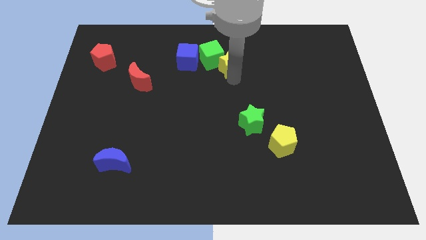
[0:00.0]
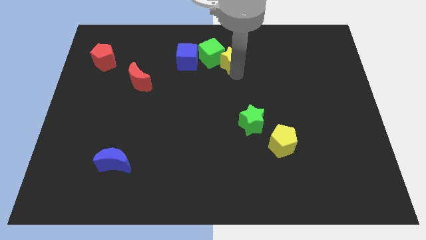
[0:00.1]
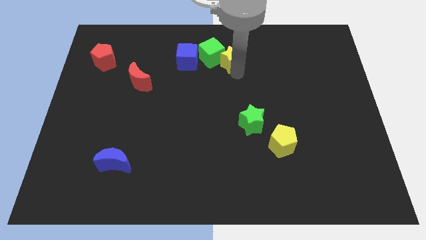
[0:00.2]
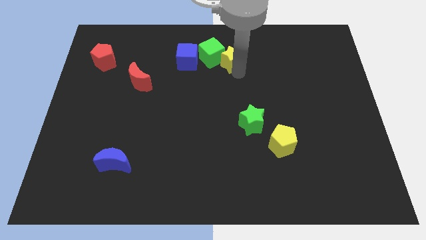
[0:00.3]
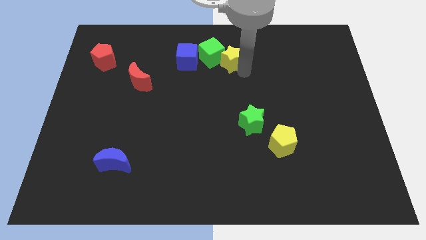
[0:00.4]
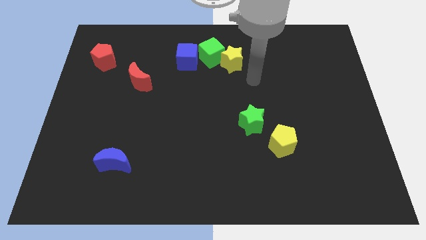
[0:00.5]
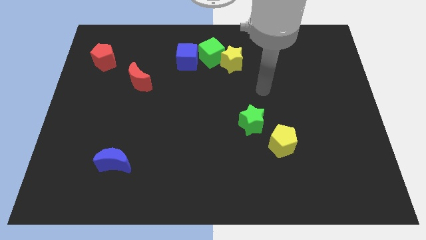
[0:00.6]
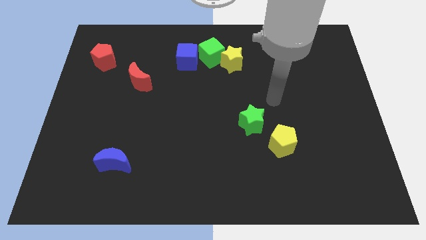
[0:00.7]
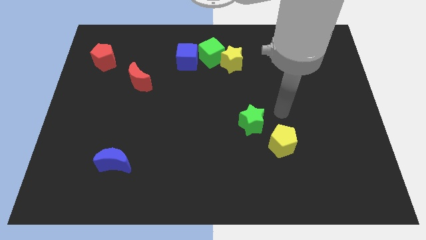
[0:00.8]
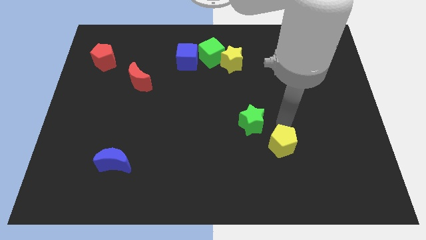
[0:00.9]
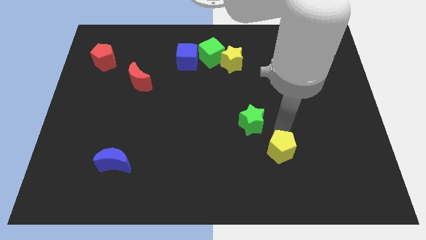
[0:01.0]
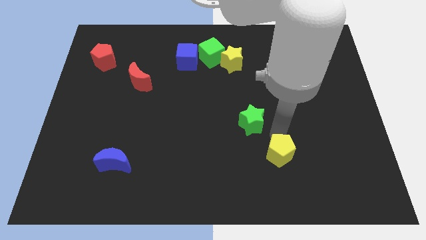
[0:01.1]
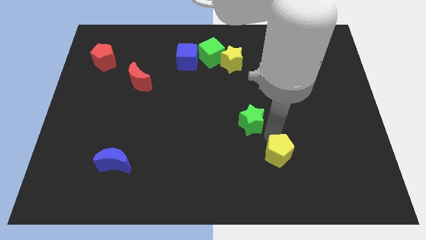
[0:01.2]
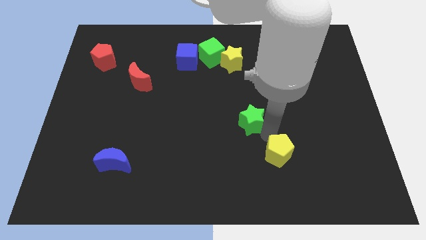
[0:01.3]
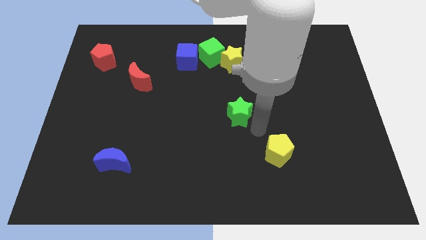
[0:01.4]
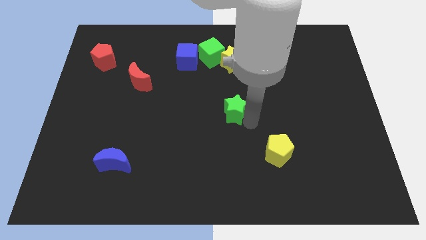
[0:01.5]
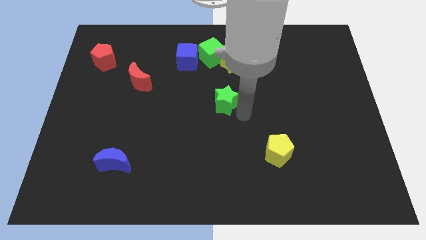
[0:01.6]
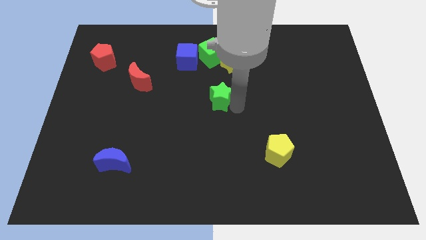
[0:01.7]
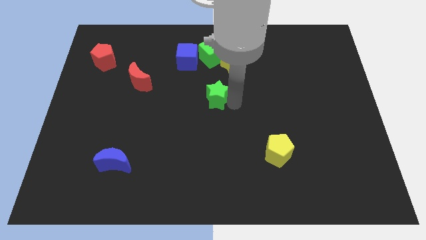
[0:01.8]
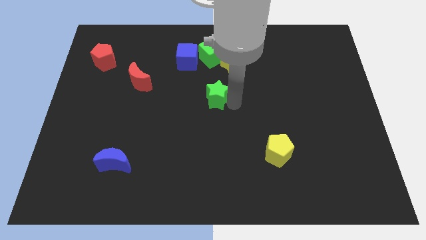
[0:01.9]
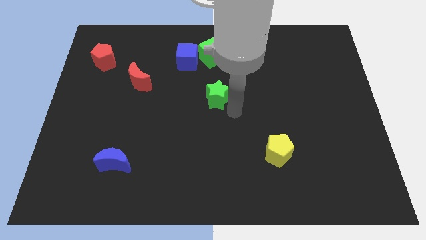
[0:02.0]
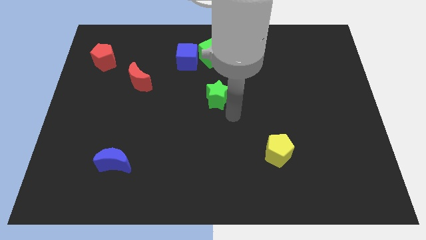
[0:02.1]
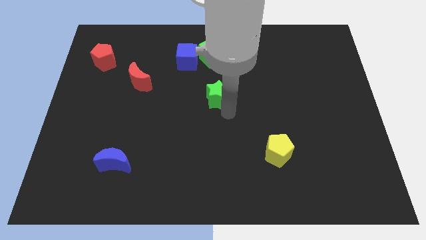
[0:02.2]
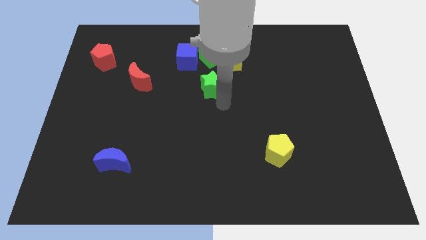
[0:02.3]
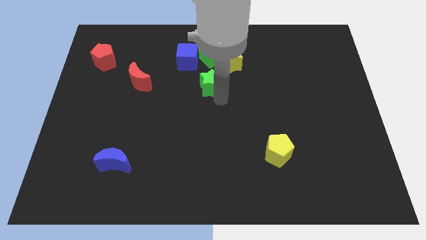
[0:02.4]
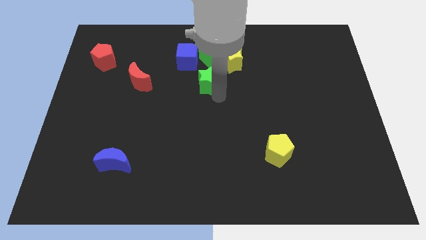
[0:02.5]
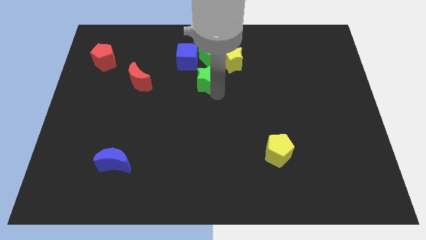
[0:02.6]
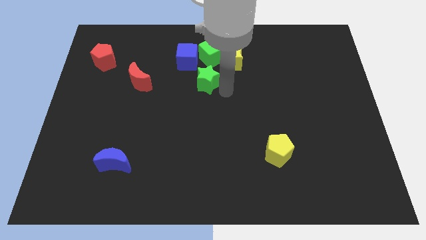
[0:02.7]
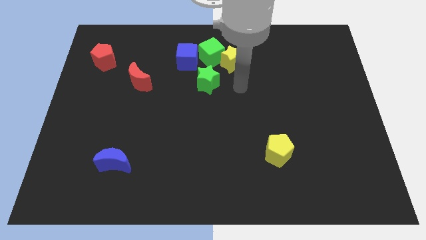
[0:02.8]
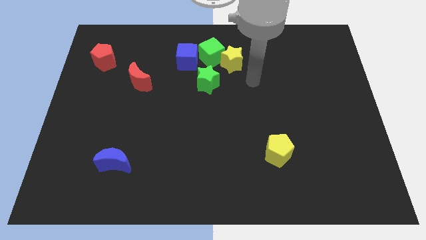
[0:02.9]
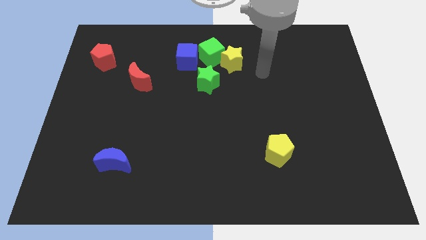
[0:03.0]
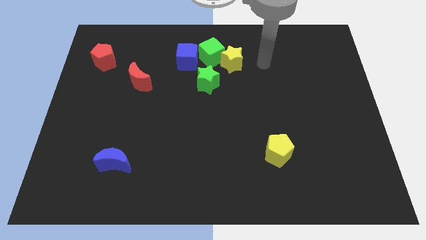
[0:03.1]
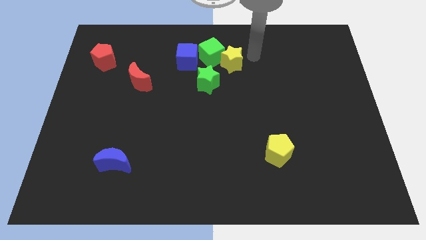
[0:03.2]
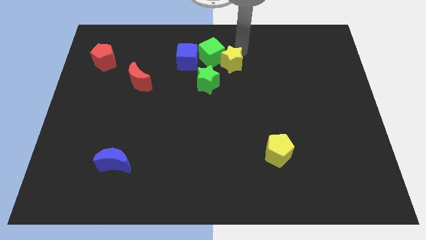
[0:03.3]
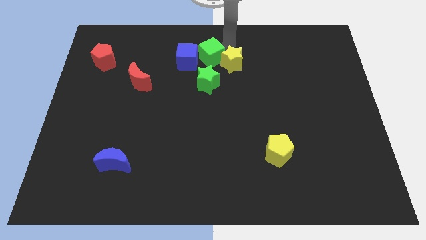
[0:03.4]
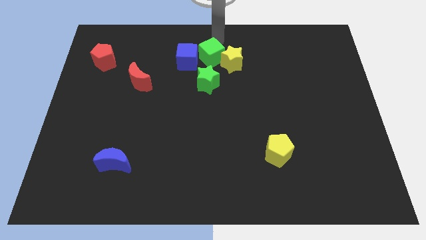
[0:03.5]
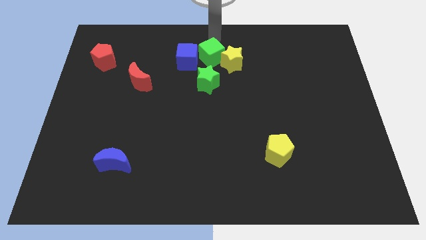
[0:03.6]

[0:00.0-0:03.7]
push the green star towards the bottom of the green cube

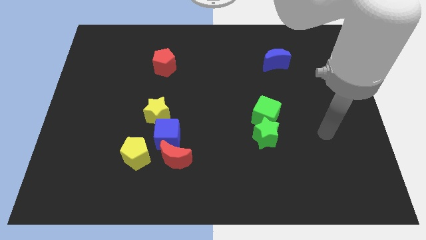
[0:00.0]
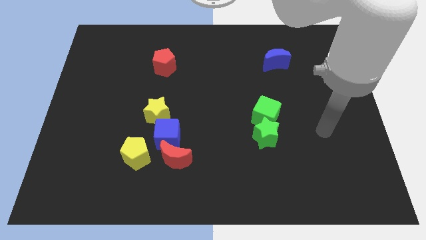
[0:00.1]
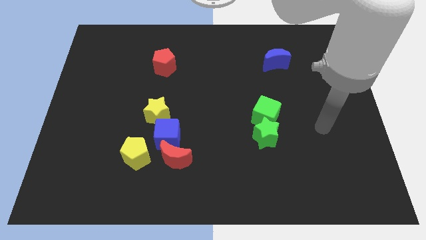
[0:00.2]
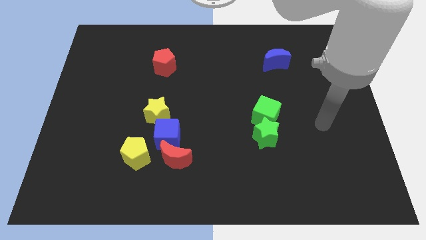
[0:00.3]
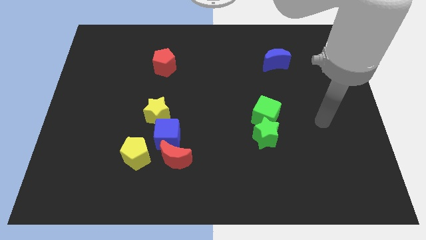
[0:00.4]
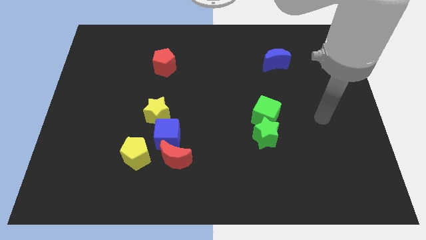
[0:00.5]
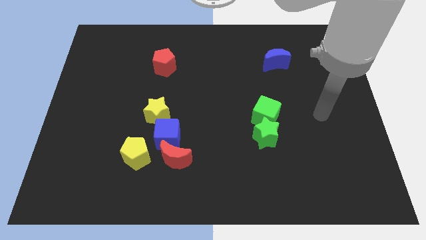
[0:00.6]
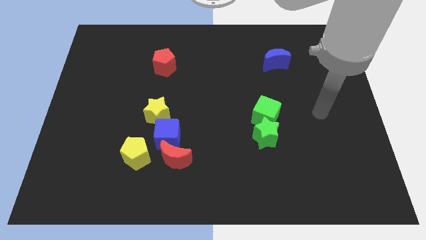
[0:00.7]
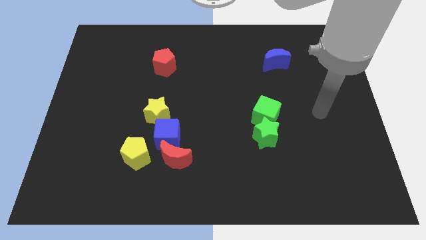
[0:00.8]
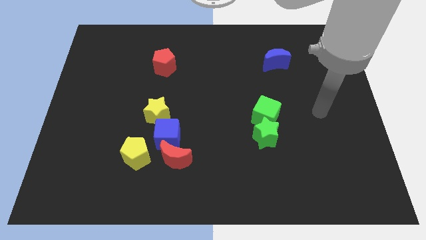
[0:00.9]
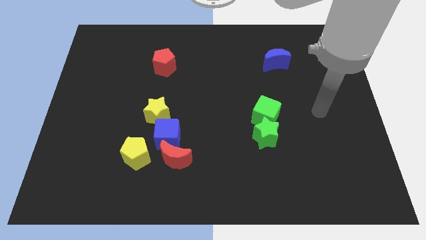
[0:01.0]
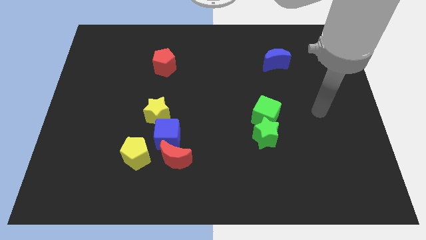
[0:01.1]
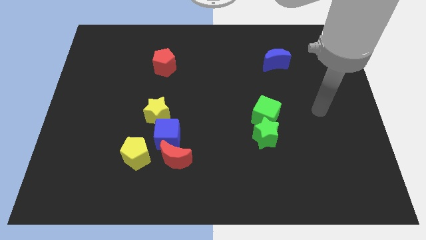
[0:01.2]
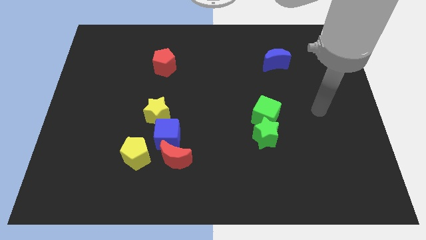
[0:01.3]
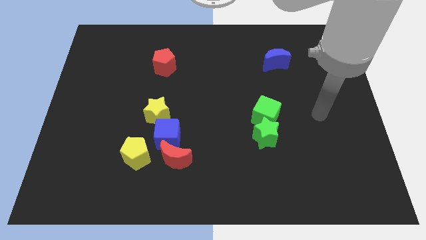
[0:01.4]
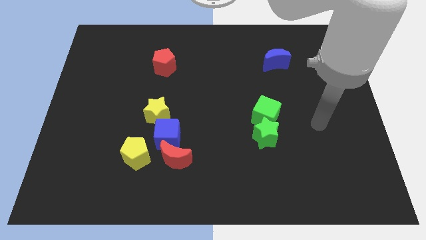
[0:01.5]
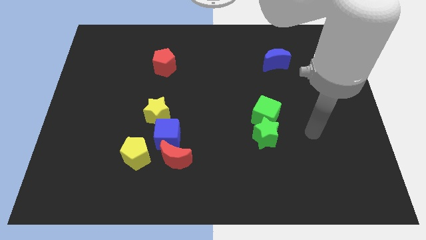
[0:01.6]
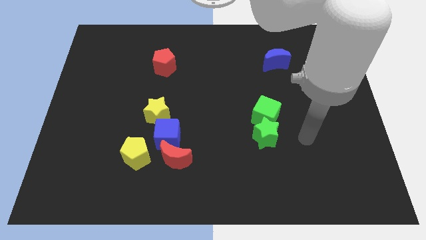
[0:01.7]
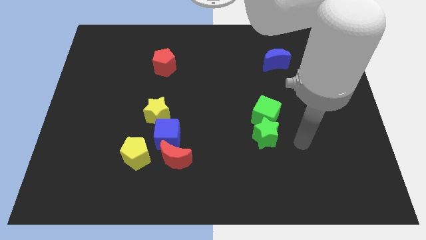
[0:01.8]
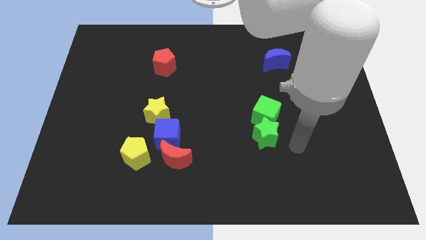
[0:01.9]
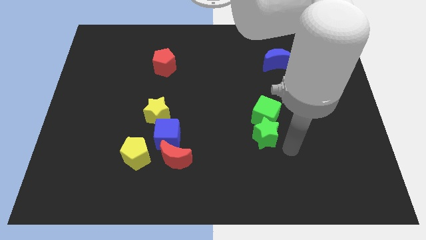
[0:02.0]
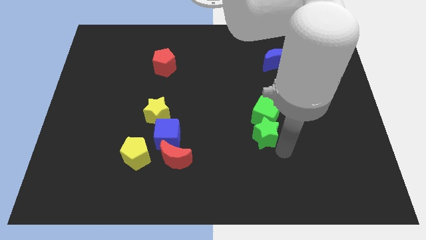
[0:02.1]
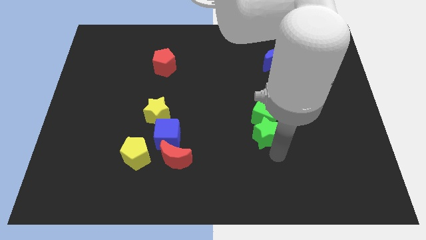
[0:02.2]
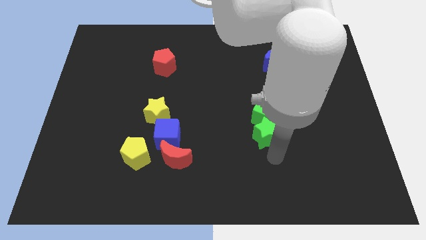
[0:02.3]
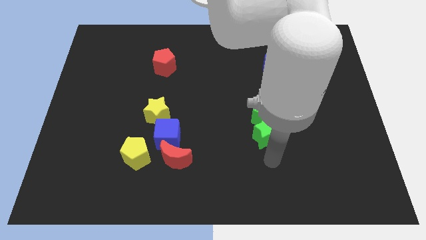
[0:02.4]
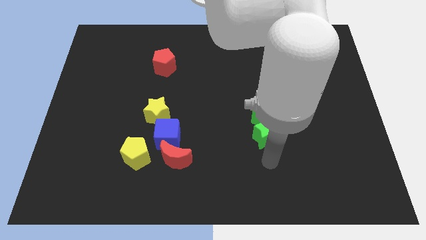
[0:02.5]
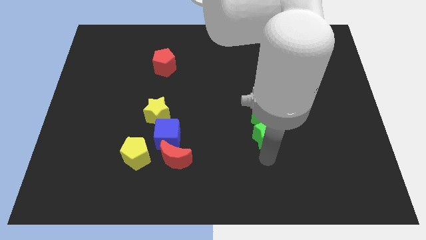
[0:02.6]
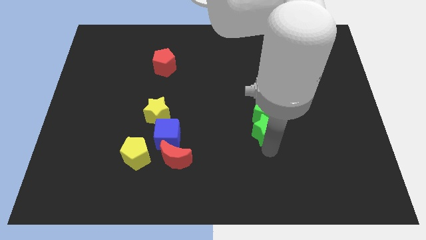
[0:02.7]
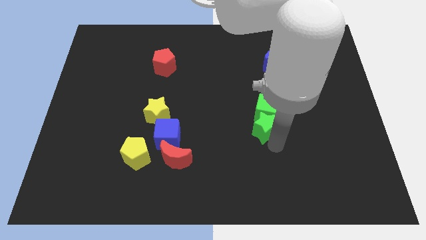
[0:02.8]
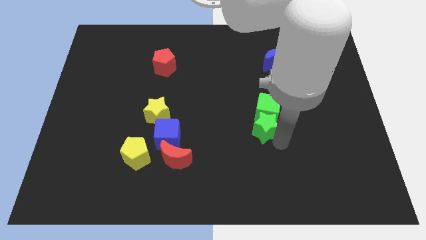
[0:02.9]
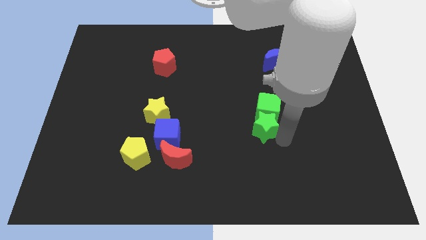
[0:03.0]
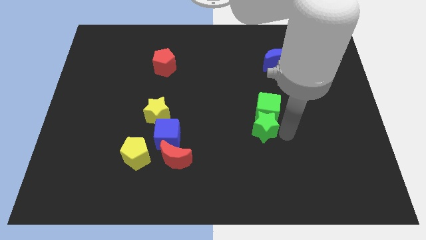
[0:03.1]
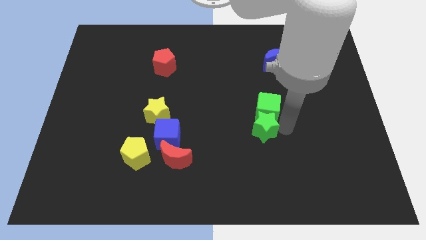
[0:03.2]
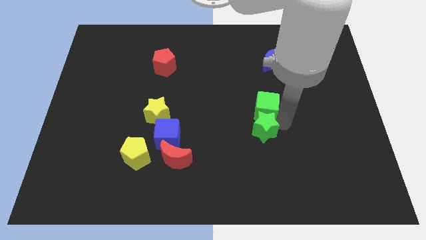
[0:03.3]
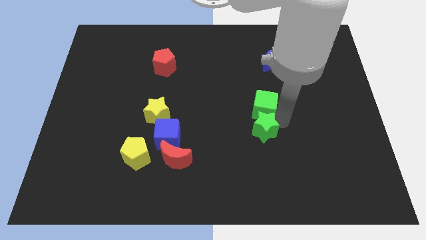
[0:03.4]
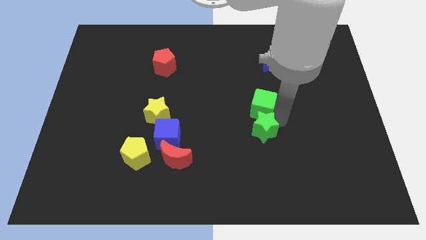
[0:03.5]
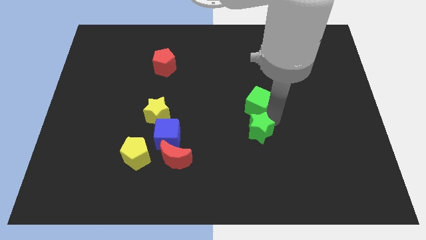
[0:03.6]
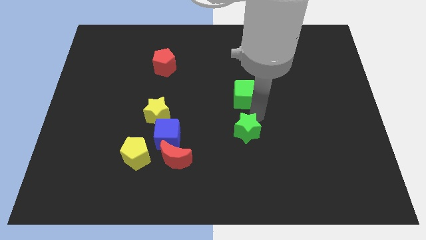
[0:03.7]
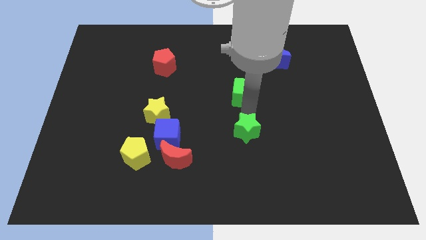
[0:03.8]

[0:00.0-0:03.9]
separate the green cube and green star from each other

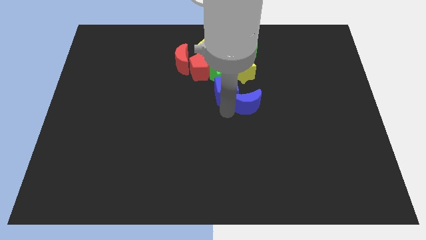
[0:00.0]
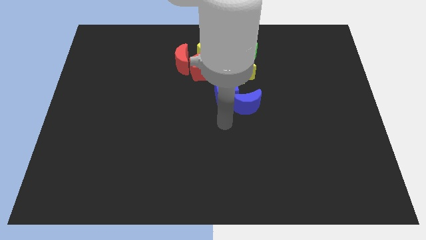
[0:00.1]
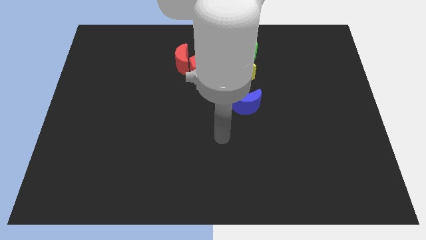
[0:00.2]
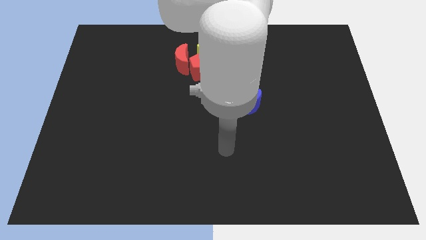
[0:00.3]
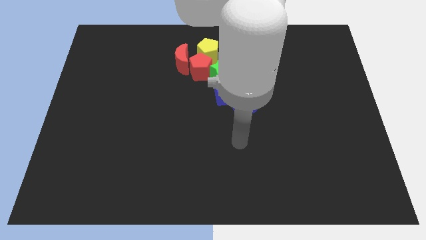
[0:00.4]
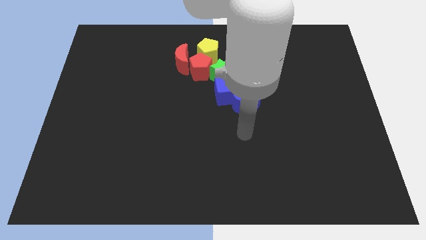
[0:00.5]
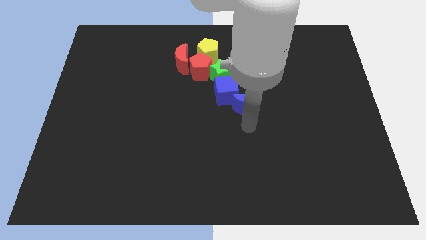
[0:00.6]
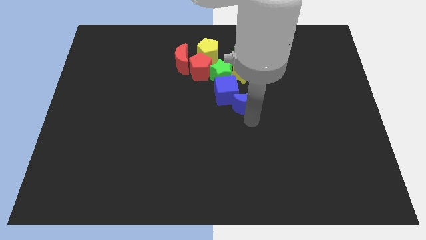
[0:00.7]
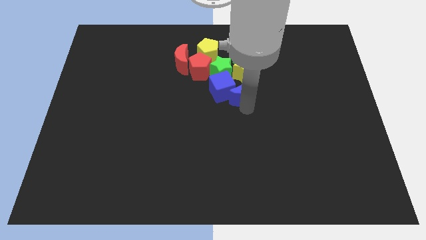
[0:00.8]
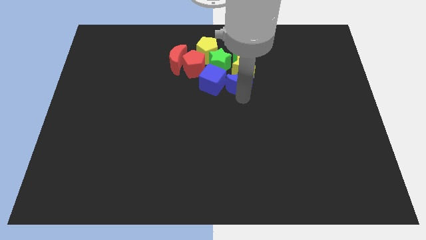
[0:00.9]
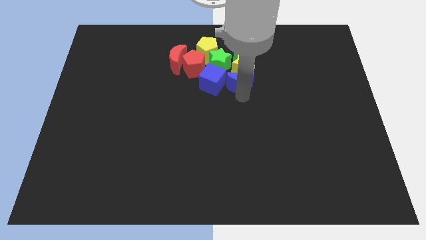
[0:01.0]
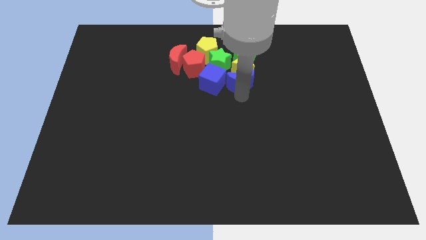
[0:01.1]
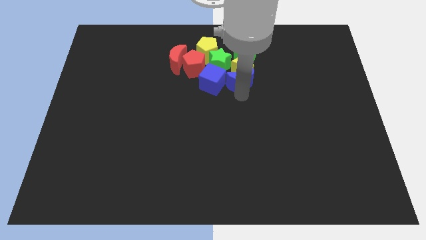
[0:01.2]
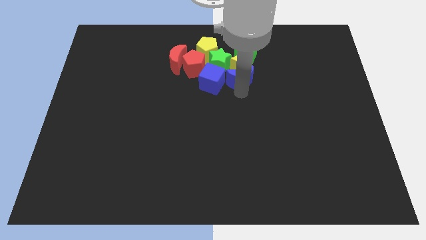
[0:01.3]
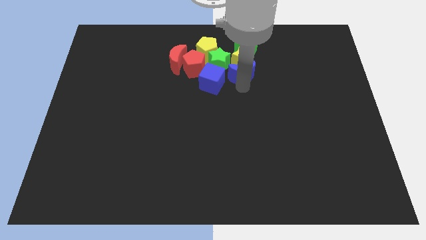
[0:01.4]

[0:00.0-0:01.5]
push the blue moon into the yellow star
